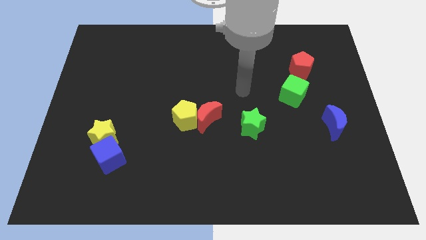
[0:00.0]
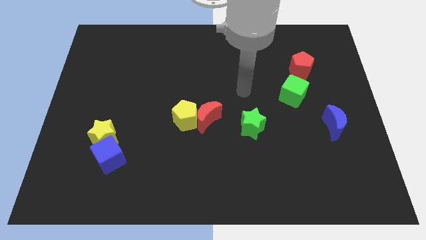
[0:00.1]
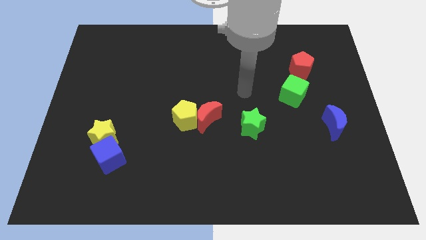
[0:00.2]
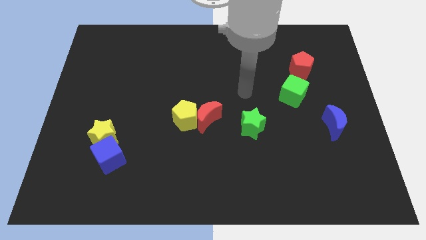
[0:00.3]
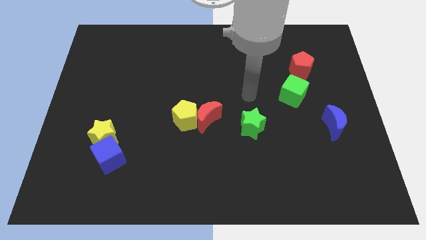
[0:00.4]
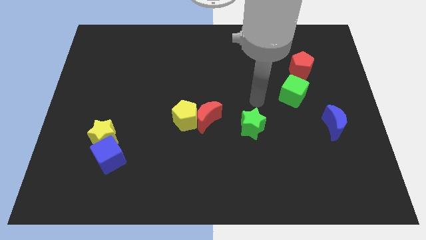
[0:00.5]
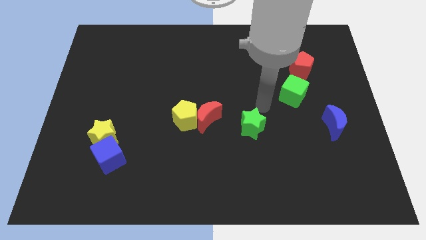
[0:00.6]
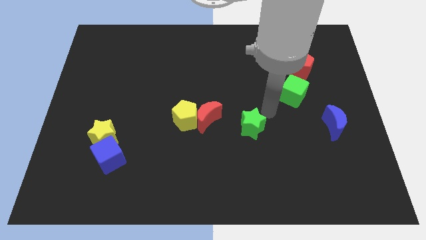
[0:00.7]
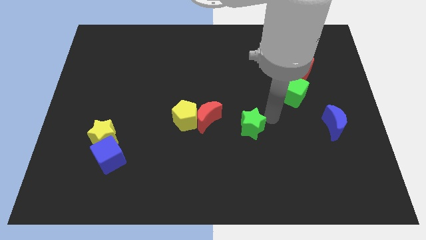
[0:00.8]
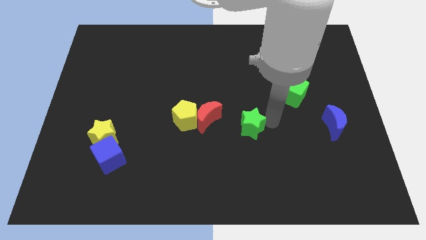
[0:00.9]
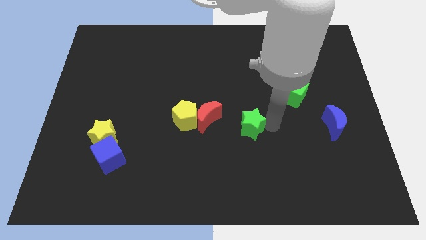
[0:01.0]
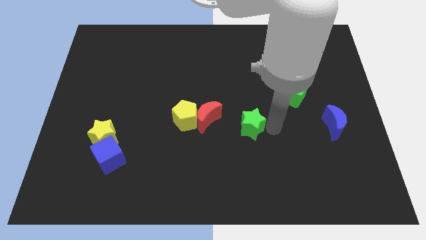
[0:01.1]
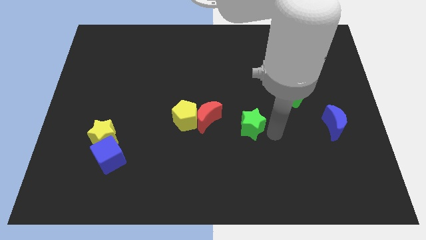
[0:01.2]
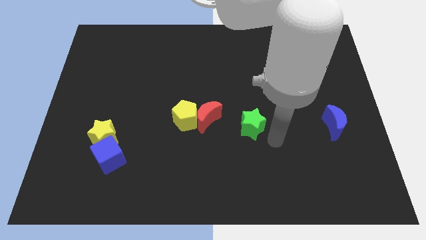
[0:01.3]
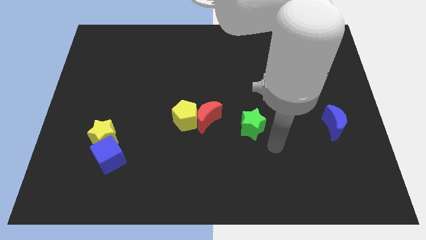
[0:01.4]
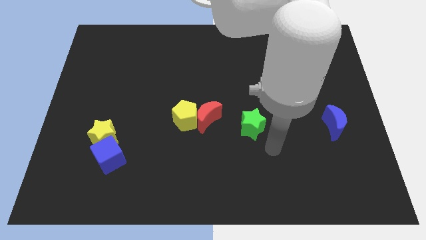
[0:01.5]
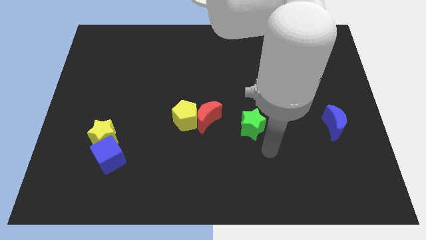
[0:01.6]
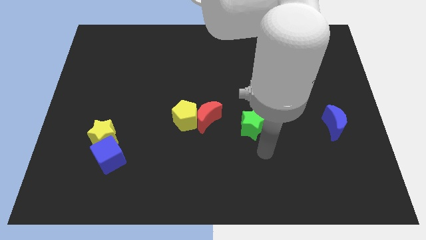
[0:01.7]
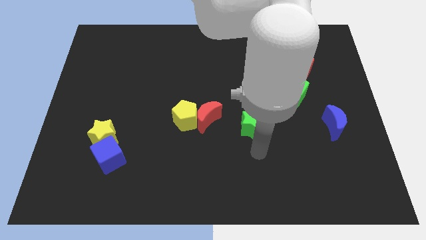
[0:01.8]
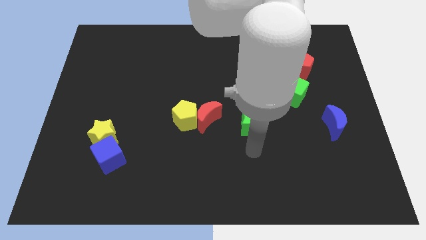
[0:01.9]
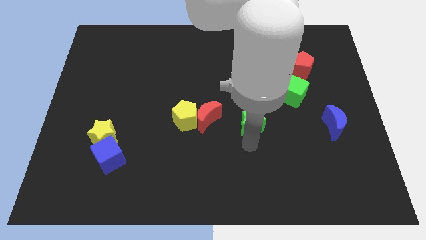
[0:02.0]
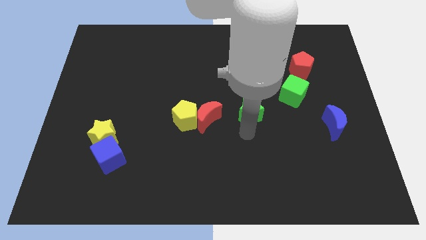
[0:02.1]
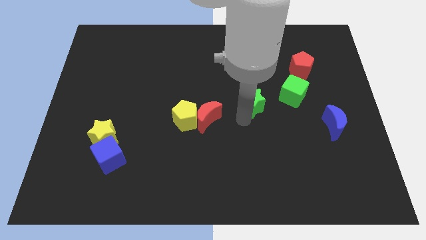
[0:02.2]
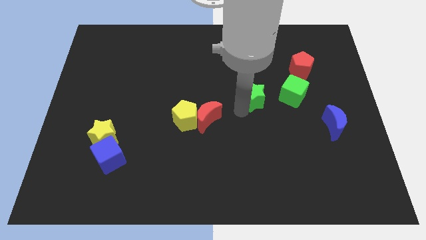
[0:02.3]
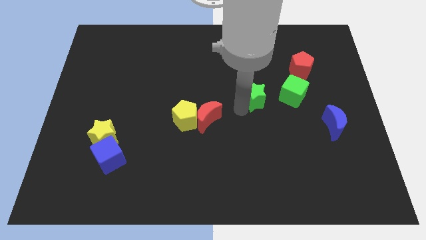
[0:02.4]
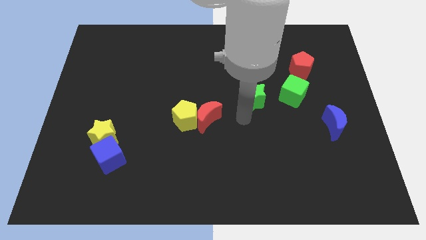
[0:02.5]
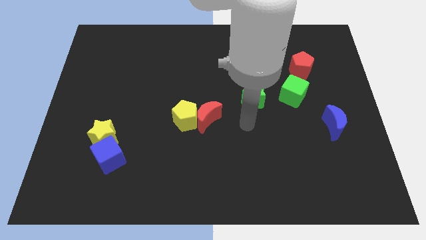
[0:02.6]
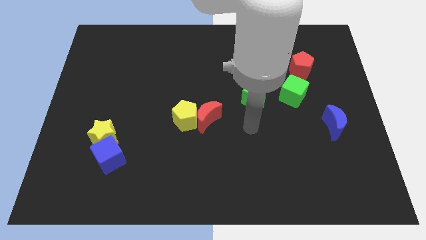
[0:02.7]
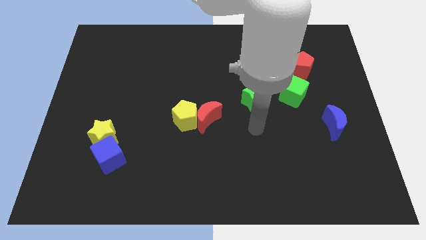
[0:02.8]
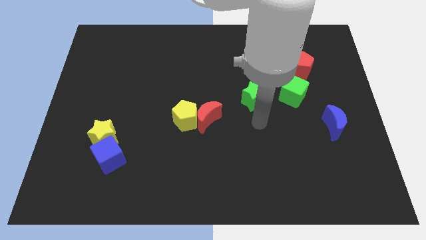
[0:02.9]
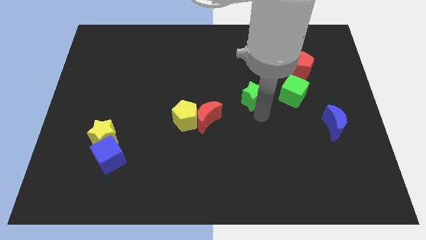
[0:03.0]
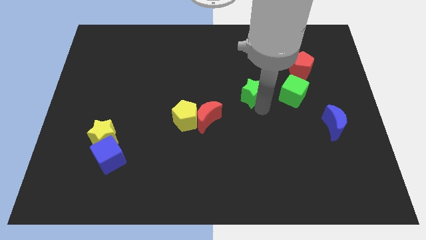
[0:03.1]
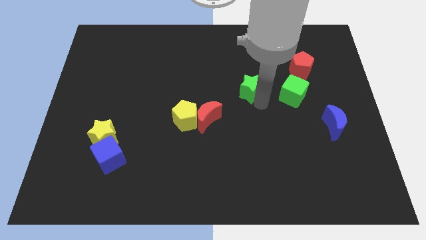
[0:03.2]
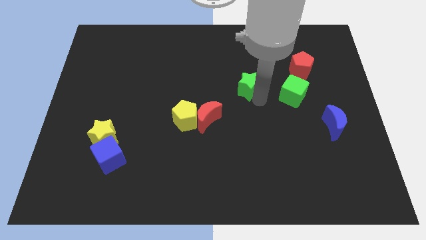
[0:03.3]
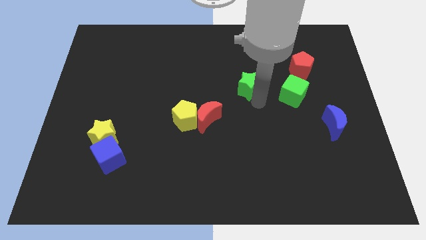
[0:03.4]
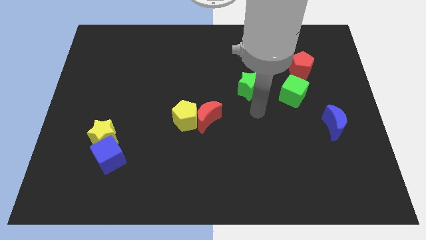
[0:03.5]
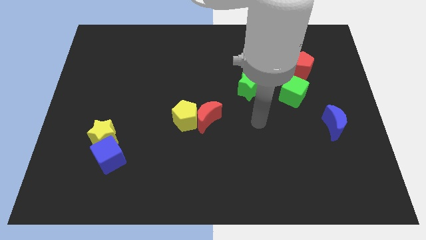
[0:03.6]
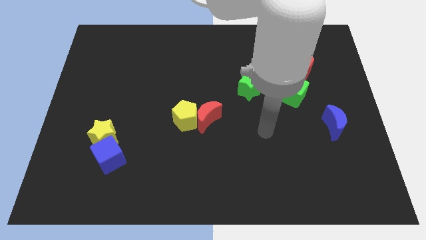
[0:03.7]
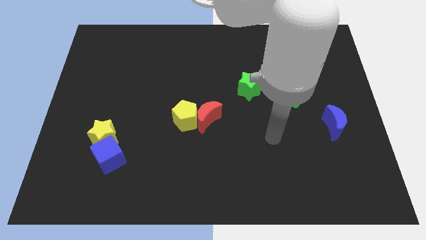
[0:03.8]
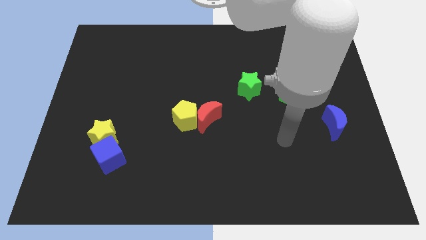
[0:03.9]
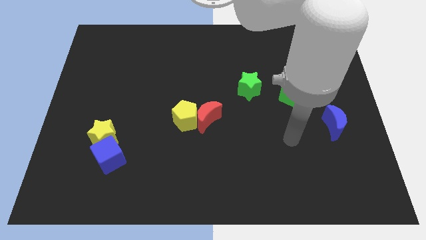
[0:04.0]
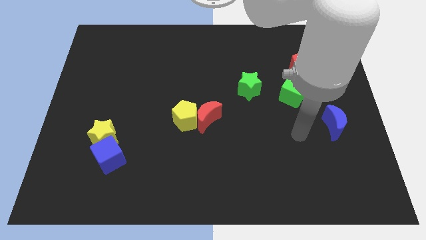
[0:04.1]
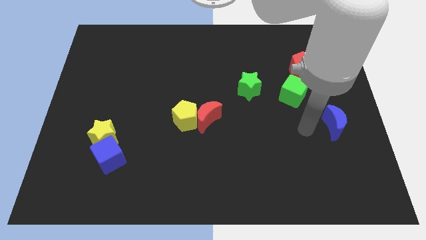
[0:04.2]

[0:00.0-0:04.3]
move green star slightly to the center of board

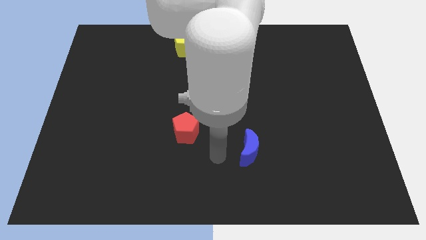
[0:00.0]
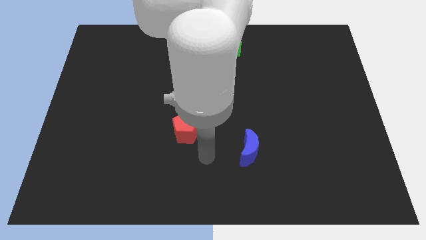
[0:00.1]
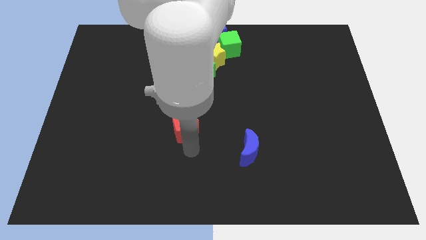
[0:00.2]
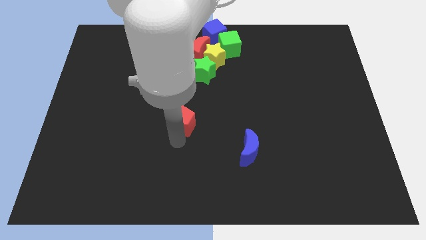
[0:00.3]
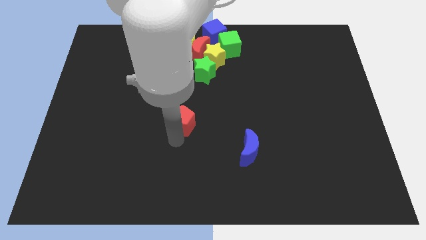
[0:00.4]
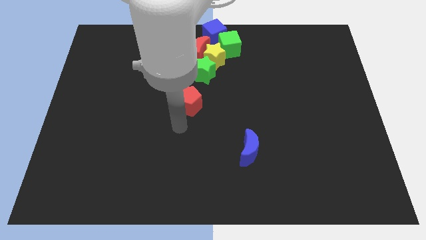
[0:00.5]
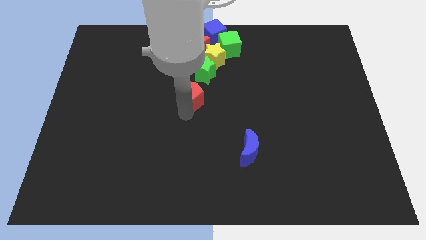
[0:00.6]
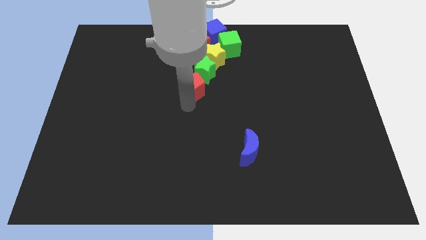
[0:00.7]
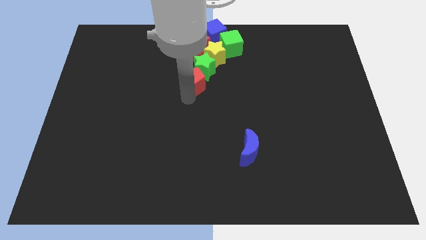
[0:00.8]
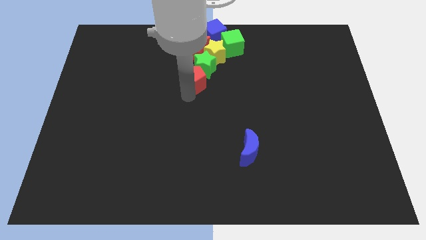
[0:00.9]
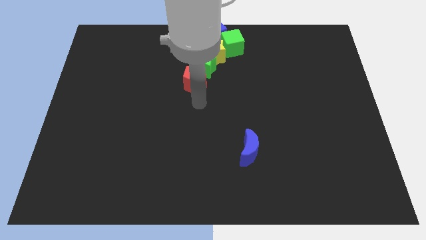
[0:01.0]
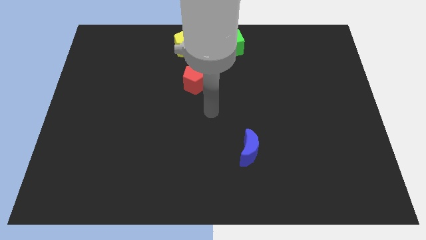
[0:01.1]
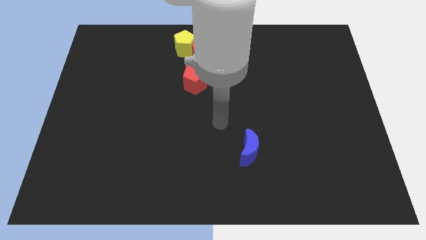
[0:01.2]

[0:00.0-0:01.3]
push the red crescent to the bottom of the green star

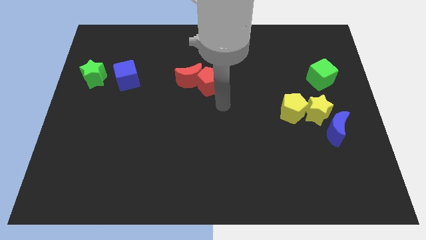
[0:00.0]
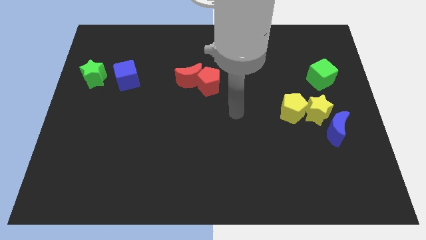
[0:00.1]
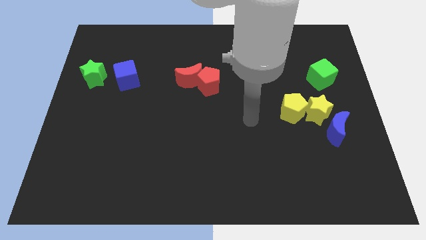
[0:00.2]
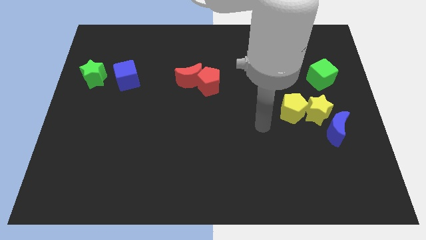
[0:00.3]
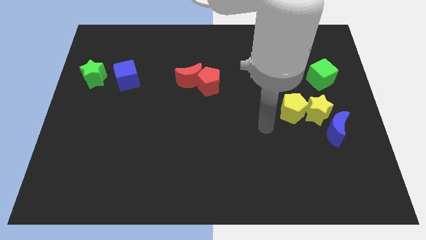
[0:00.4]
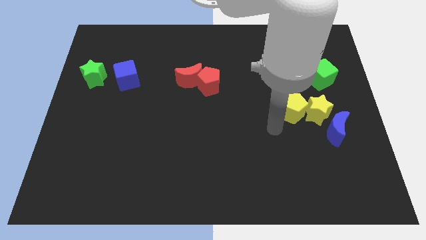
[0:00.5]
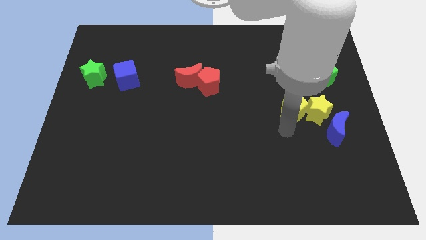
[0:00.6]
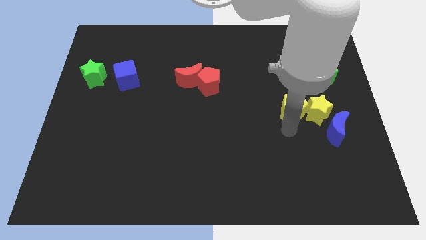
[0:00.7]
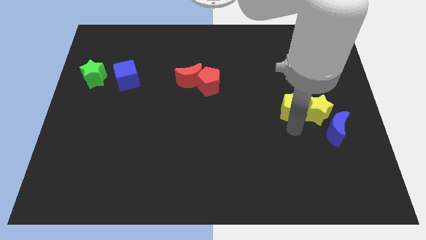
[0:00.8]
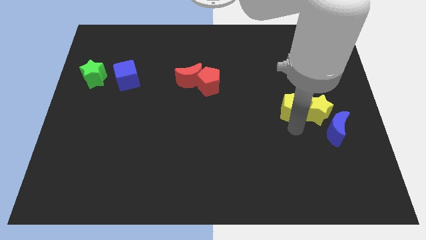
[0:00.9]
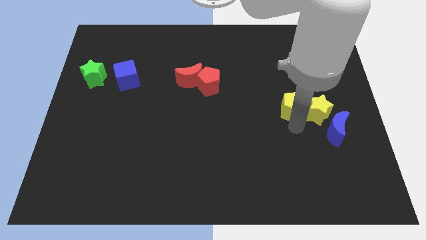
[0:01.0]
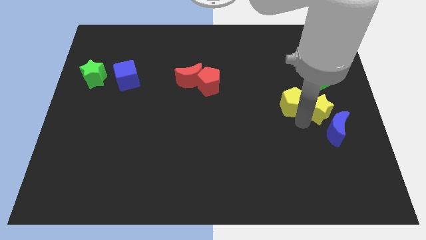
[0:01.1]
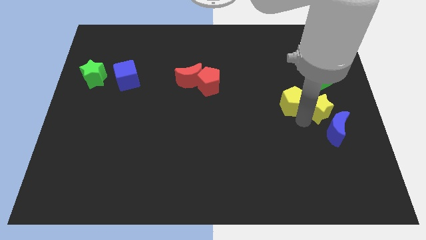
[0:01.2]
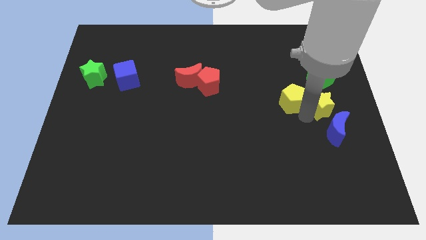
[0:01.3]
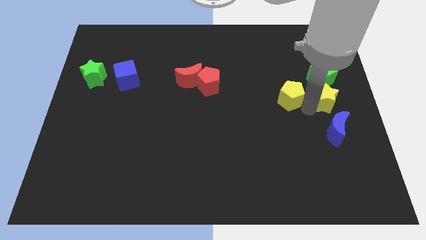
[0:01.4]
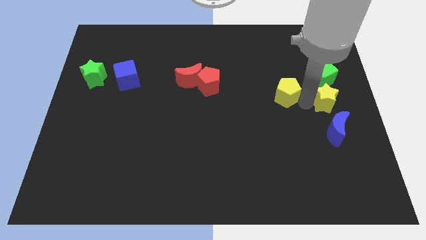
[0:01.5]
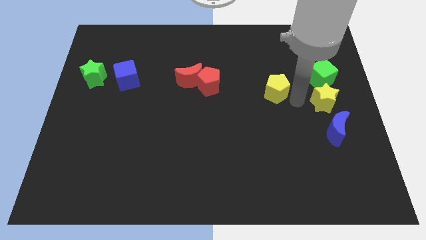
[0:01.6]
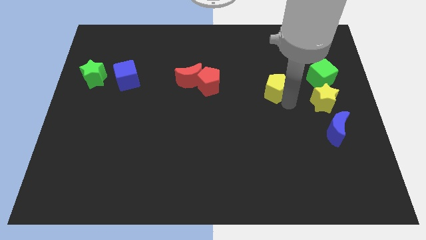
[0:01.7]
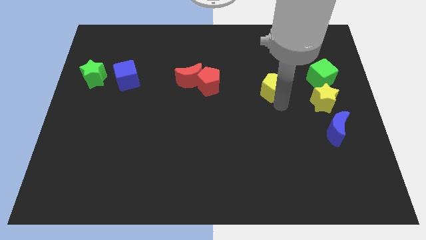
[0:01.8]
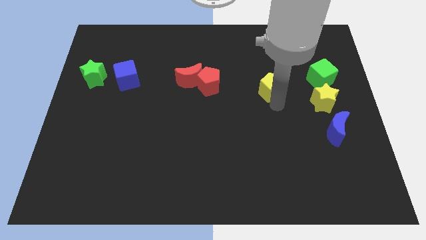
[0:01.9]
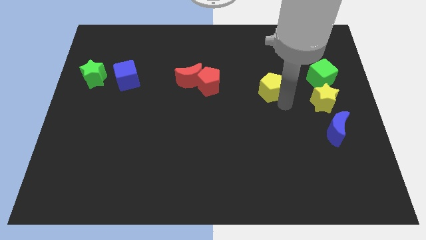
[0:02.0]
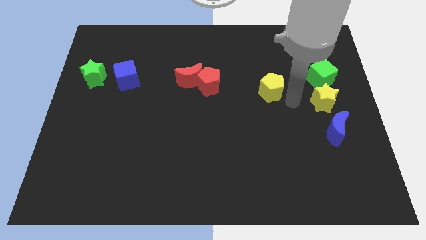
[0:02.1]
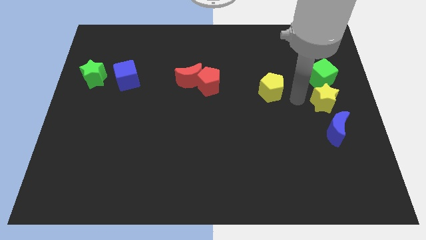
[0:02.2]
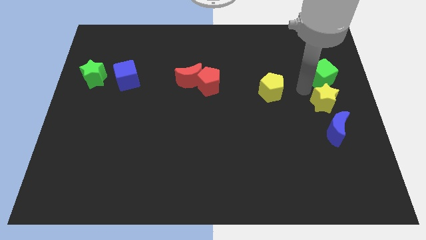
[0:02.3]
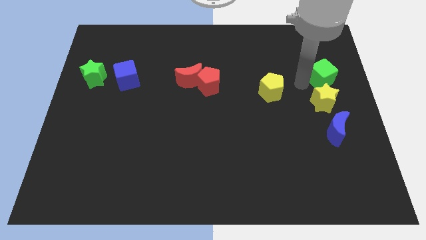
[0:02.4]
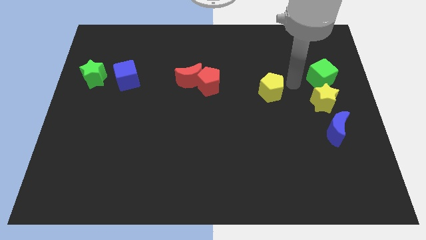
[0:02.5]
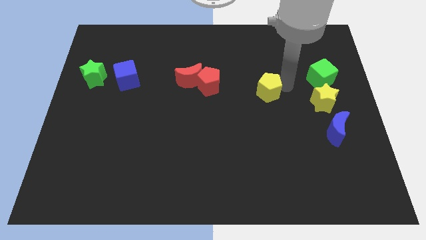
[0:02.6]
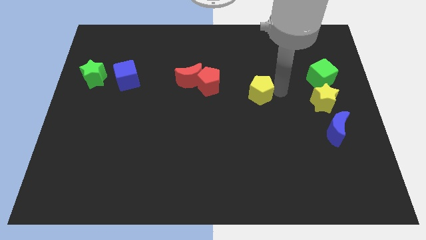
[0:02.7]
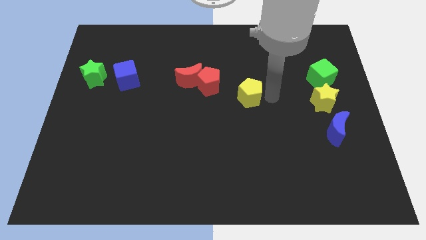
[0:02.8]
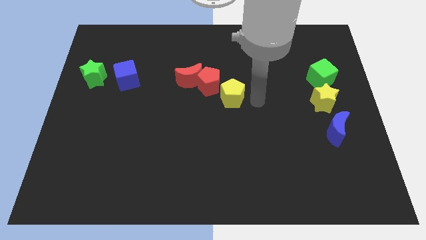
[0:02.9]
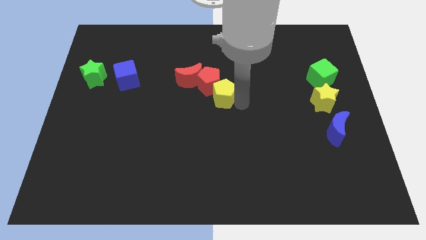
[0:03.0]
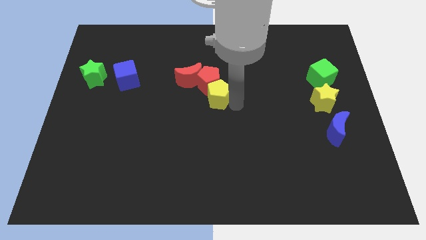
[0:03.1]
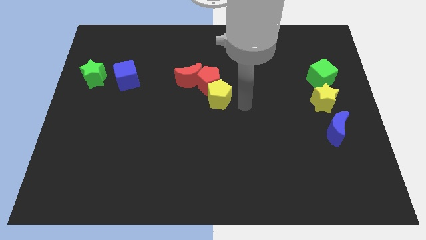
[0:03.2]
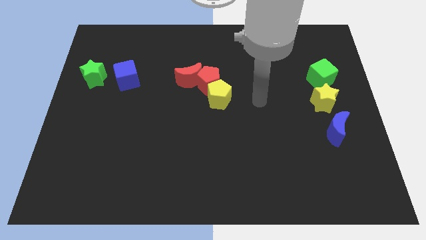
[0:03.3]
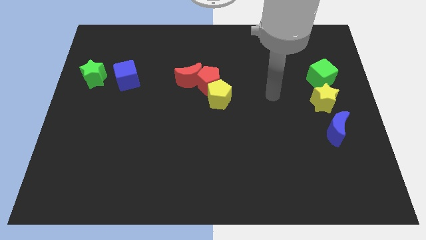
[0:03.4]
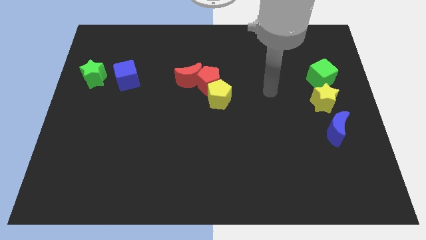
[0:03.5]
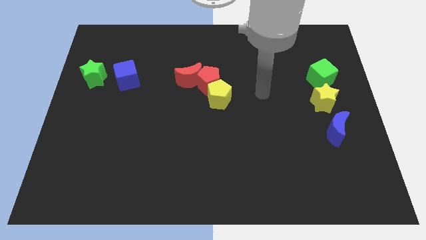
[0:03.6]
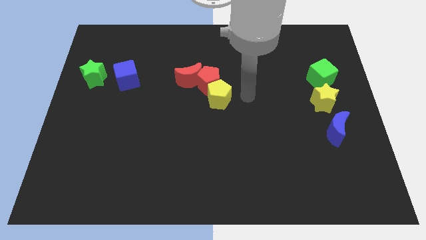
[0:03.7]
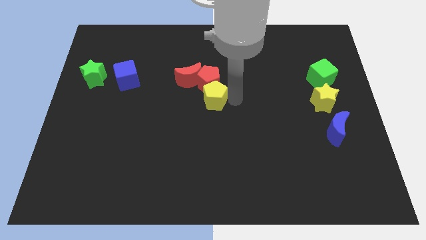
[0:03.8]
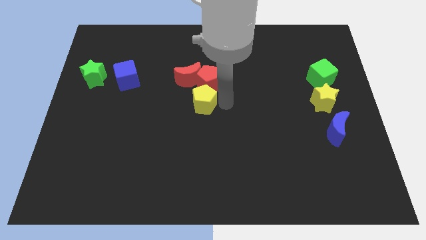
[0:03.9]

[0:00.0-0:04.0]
move yellow star below the red pentagon
